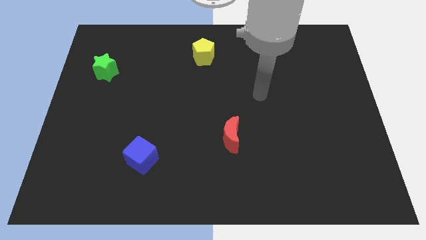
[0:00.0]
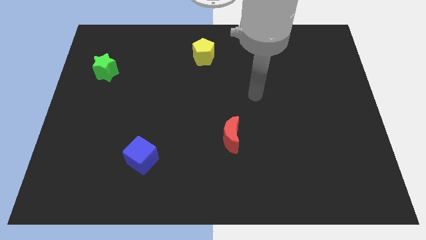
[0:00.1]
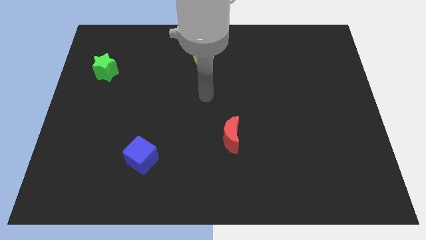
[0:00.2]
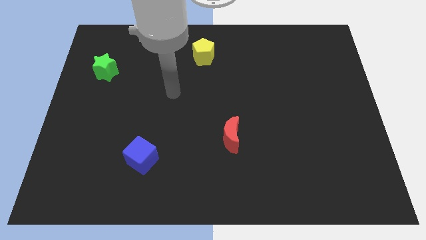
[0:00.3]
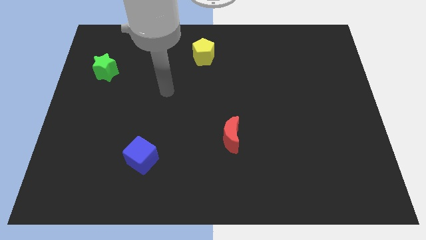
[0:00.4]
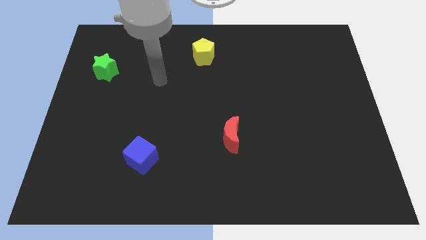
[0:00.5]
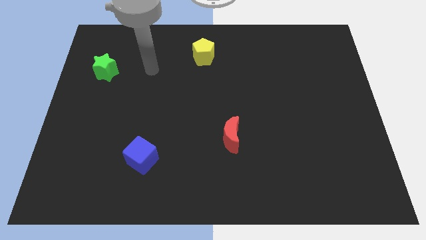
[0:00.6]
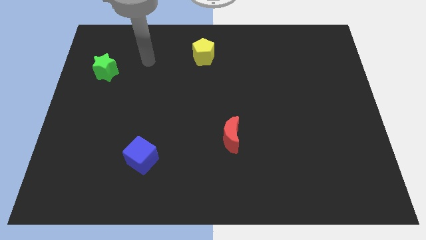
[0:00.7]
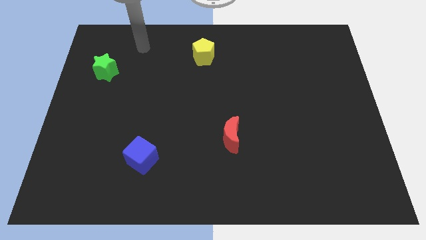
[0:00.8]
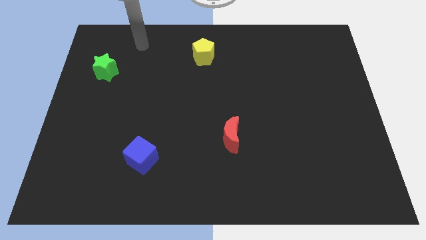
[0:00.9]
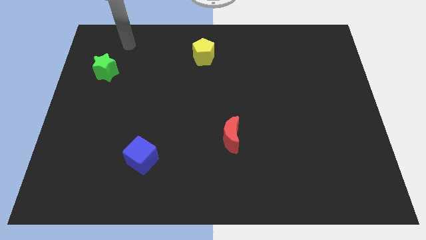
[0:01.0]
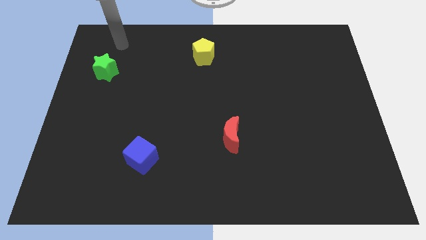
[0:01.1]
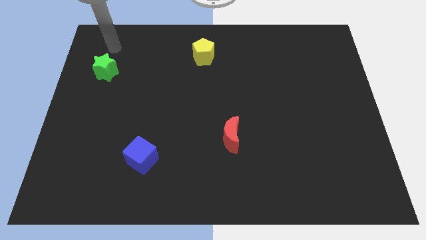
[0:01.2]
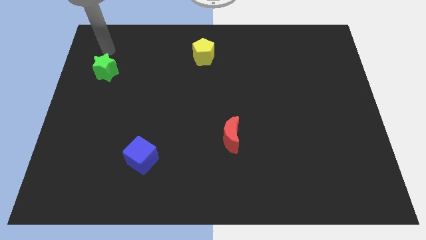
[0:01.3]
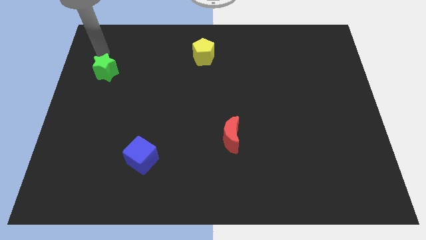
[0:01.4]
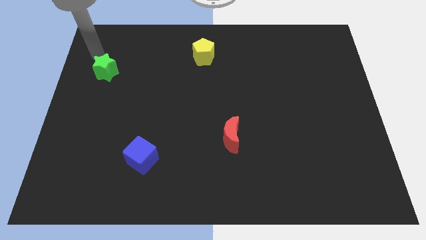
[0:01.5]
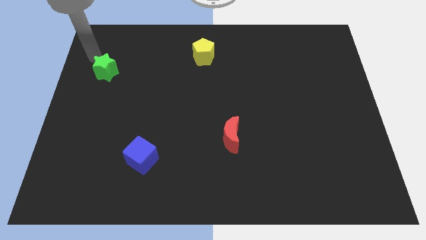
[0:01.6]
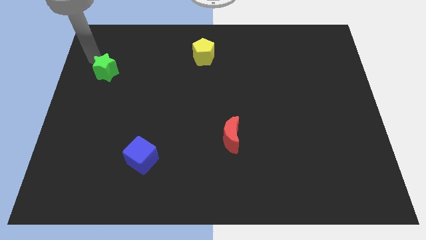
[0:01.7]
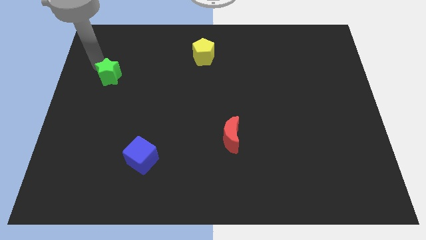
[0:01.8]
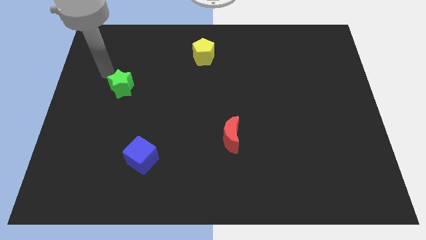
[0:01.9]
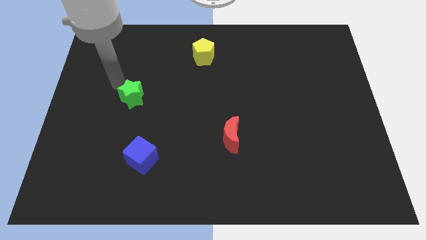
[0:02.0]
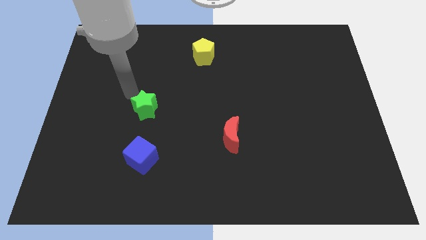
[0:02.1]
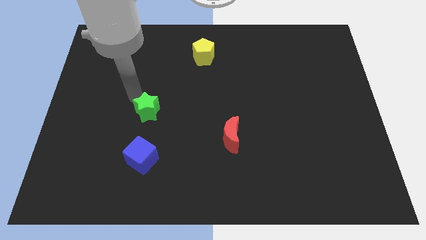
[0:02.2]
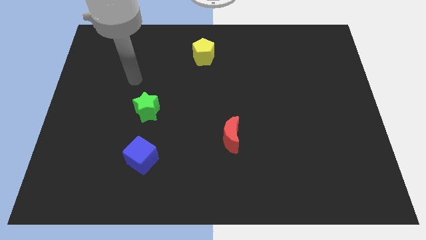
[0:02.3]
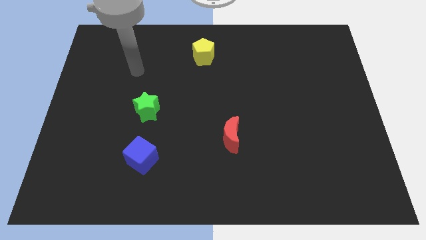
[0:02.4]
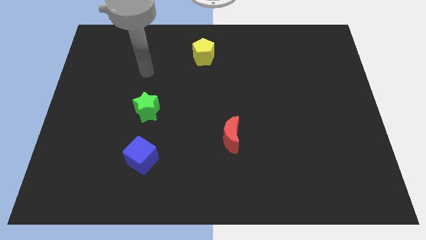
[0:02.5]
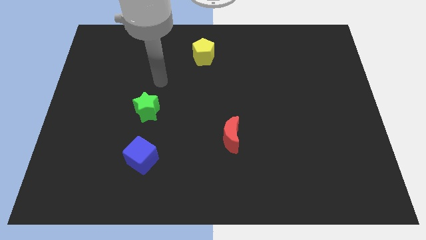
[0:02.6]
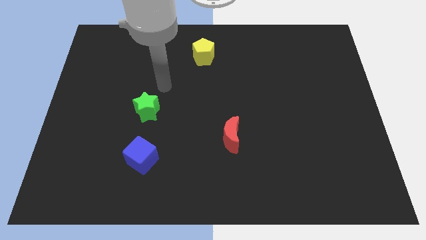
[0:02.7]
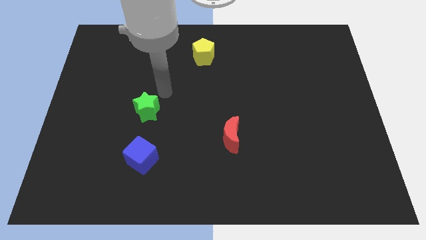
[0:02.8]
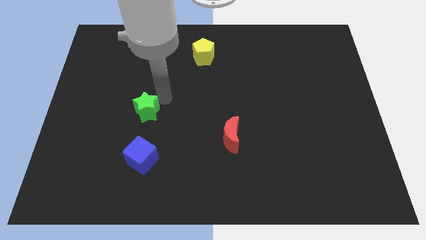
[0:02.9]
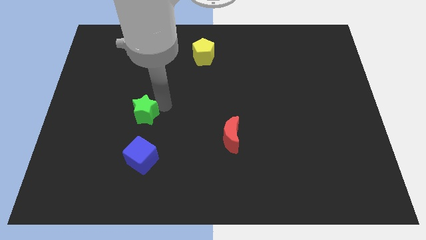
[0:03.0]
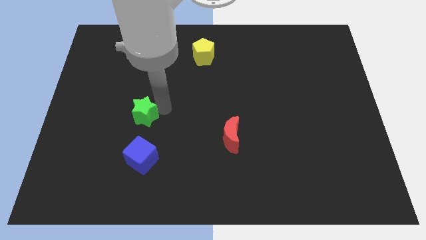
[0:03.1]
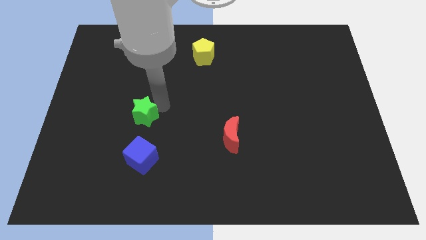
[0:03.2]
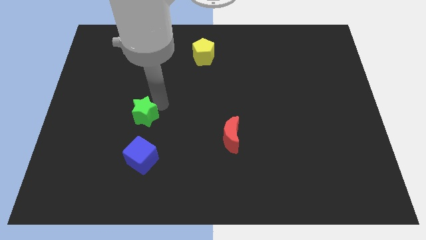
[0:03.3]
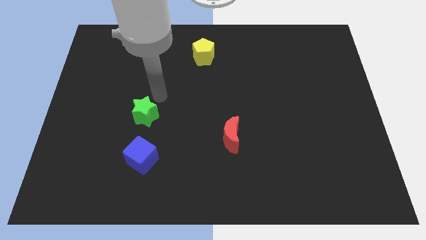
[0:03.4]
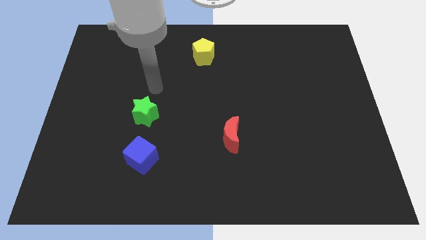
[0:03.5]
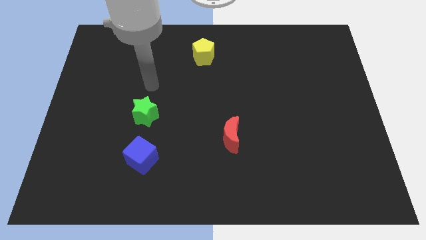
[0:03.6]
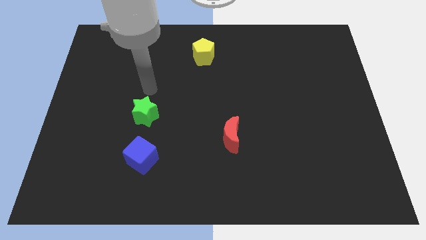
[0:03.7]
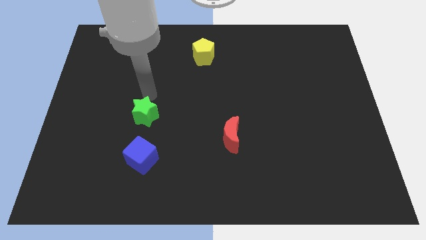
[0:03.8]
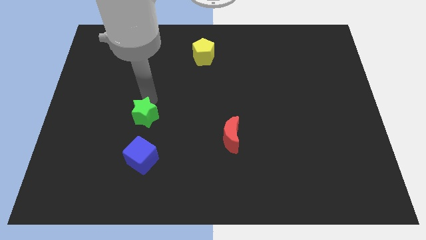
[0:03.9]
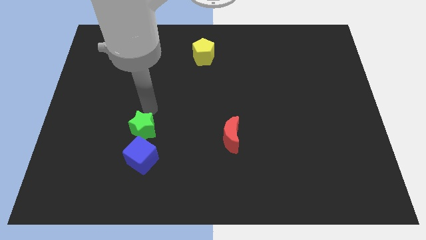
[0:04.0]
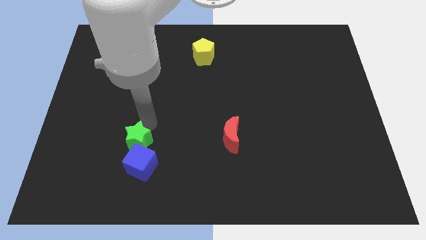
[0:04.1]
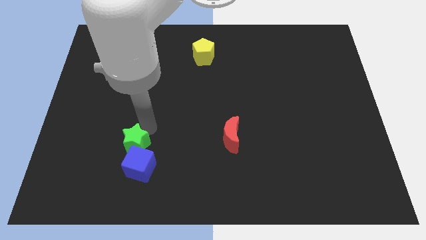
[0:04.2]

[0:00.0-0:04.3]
put the star next to the cube

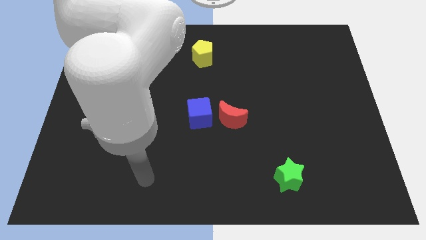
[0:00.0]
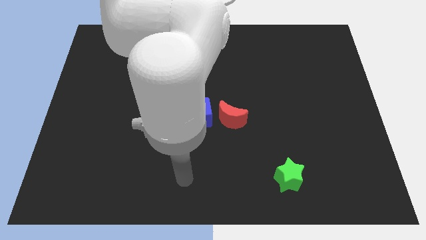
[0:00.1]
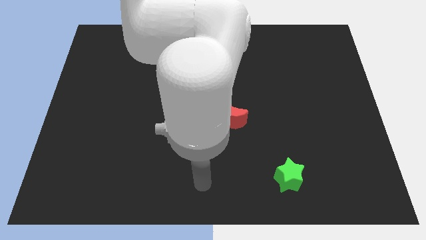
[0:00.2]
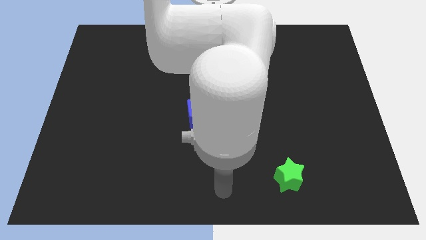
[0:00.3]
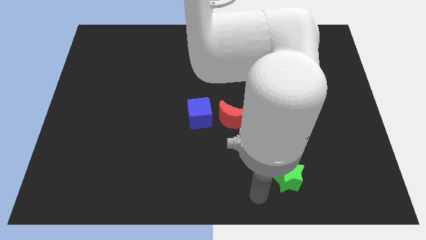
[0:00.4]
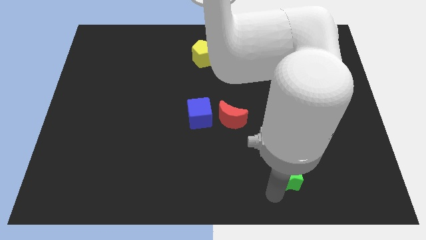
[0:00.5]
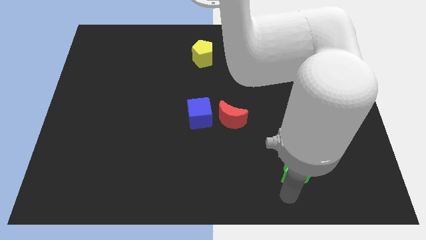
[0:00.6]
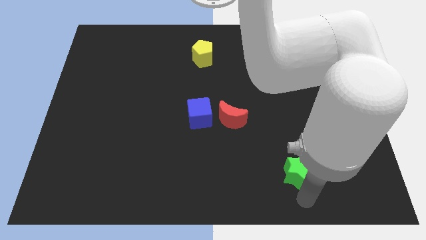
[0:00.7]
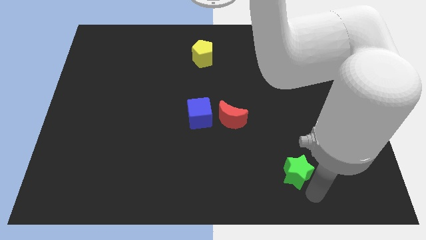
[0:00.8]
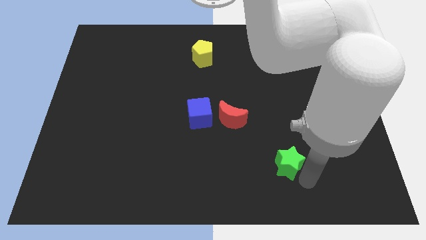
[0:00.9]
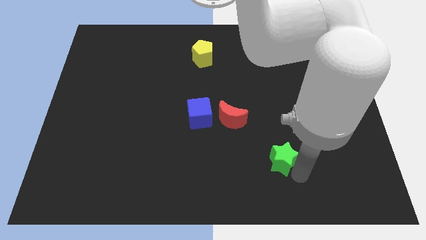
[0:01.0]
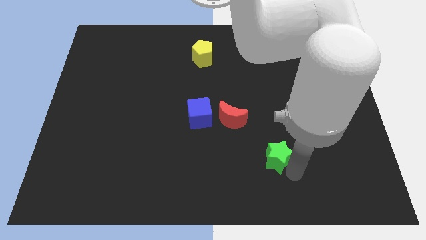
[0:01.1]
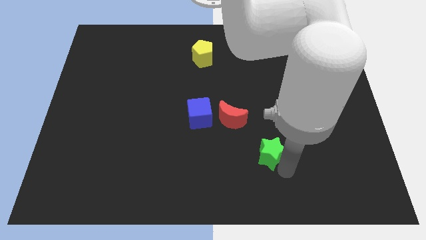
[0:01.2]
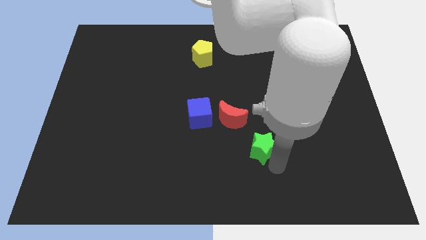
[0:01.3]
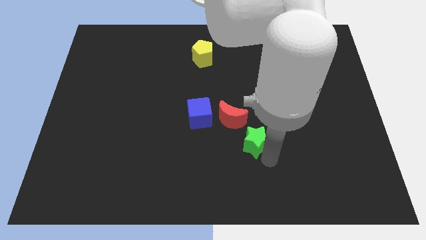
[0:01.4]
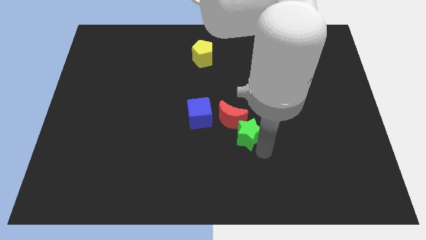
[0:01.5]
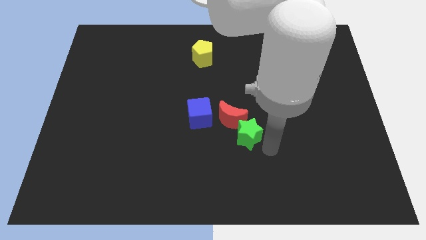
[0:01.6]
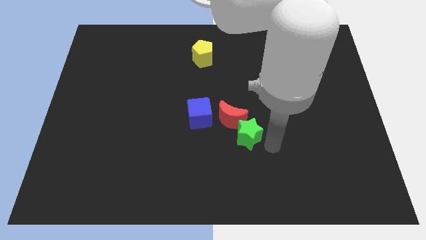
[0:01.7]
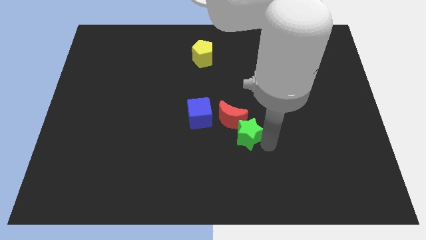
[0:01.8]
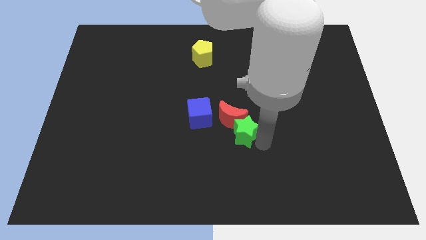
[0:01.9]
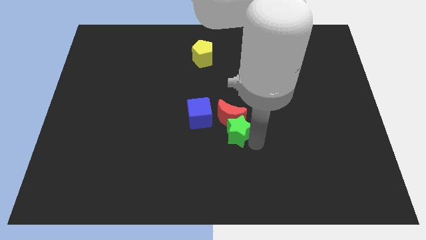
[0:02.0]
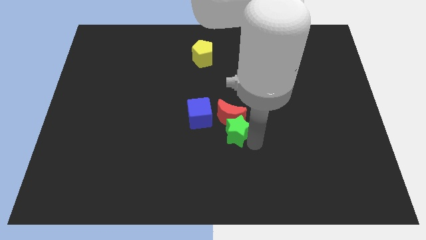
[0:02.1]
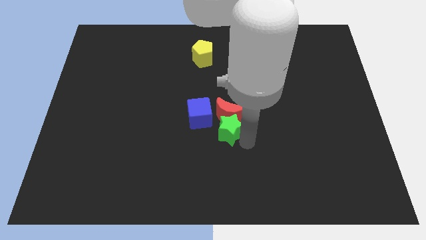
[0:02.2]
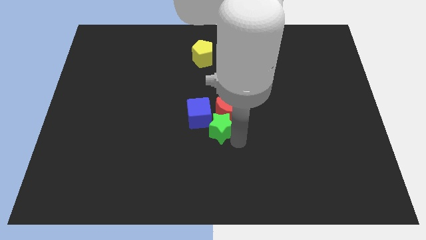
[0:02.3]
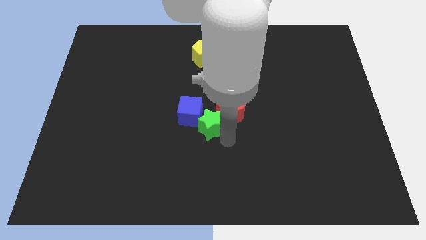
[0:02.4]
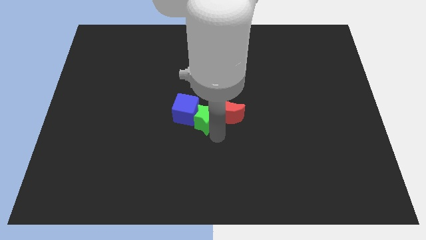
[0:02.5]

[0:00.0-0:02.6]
push the green block towards the blue cube

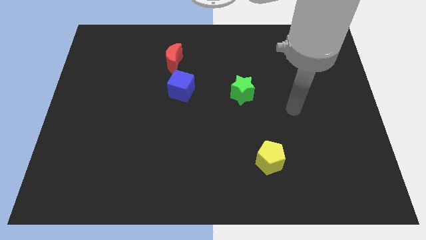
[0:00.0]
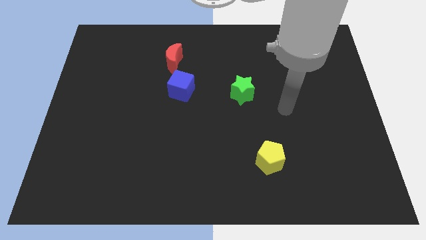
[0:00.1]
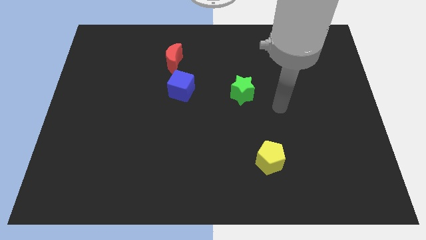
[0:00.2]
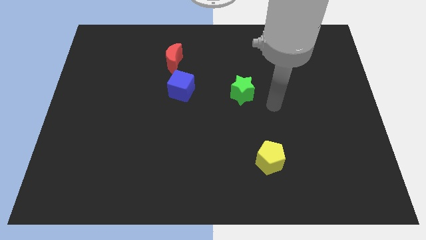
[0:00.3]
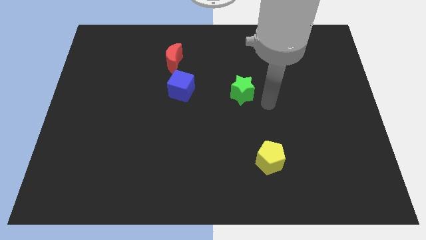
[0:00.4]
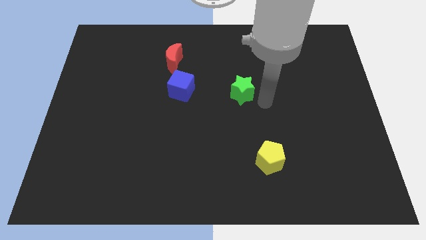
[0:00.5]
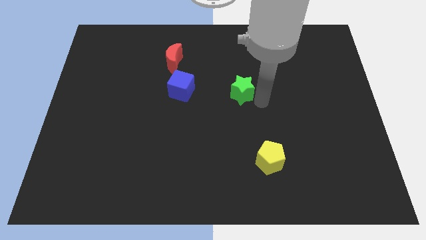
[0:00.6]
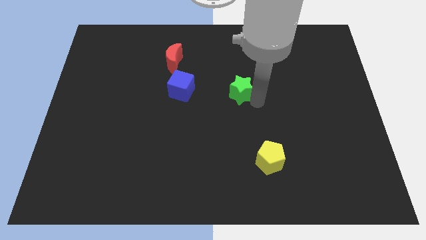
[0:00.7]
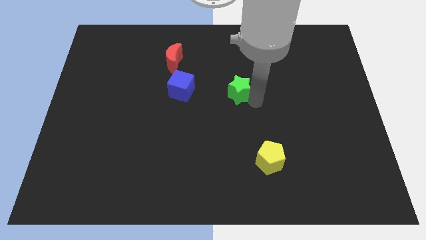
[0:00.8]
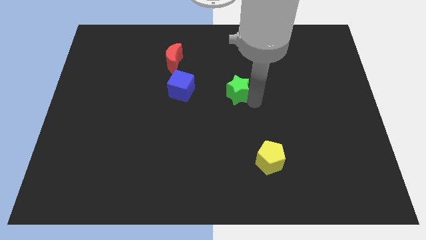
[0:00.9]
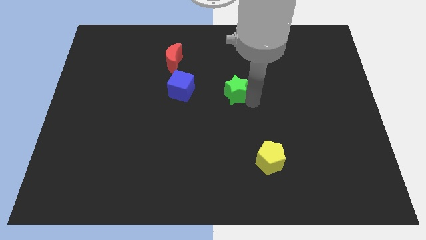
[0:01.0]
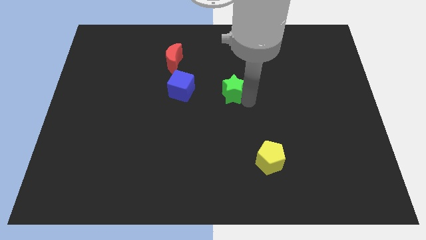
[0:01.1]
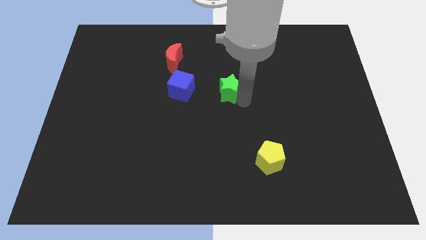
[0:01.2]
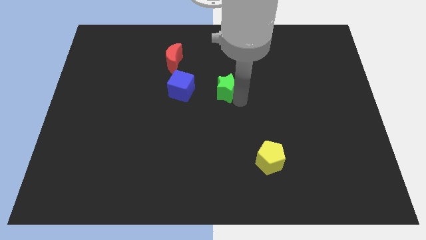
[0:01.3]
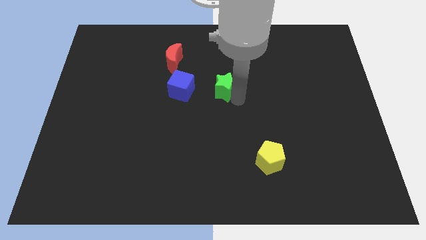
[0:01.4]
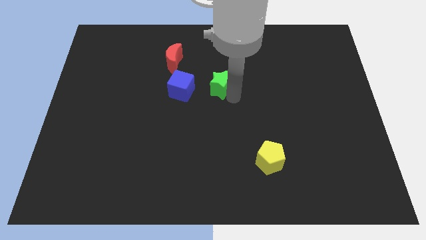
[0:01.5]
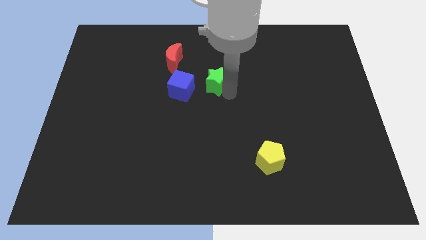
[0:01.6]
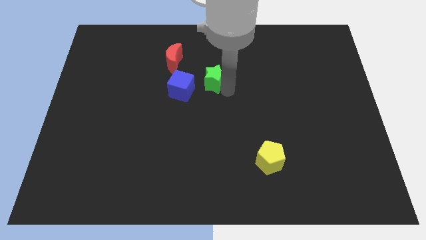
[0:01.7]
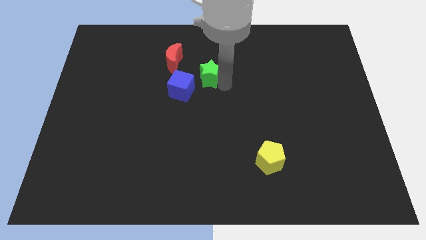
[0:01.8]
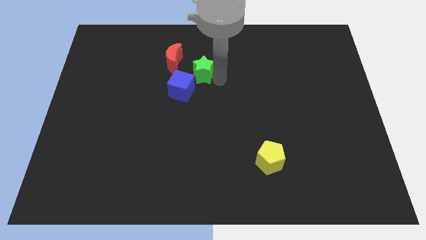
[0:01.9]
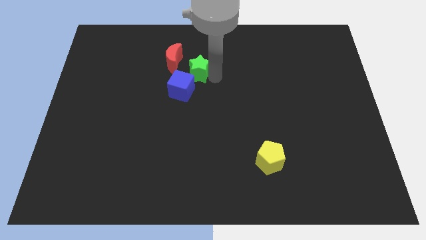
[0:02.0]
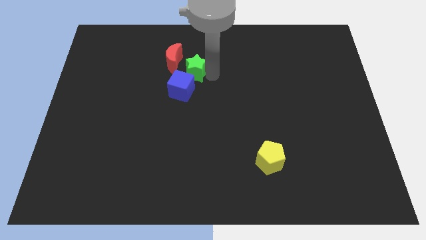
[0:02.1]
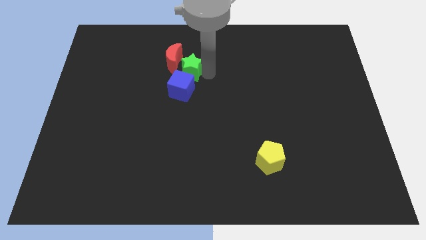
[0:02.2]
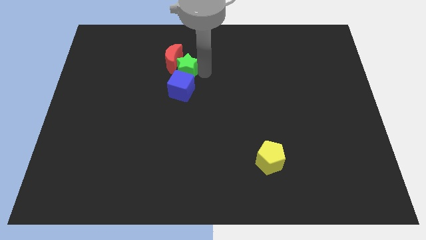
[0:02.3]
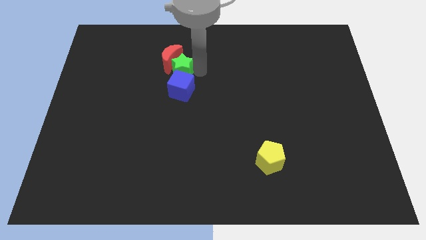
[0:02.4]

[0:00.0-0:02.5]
move the green star to the red block
